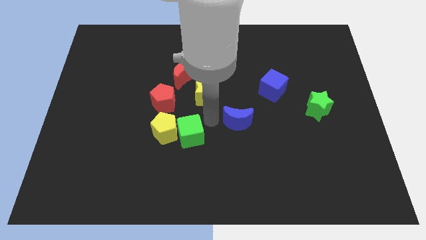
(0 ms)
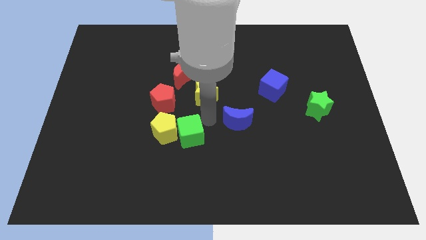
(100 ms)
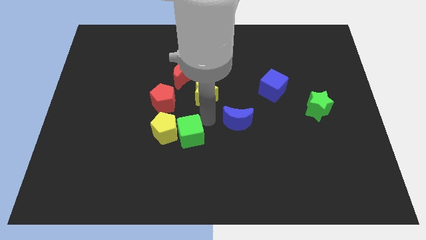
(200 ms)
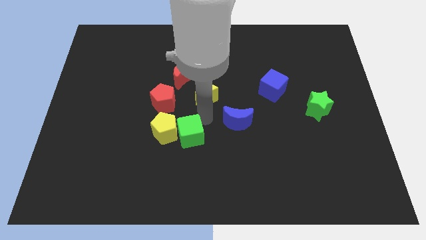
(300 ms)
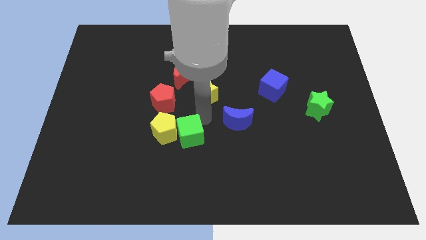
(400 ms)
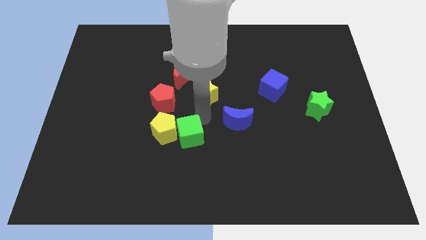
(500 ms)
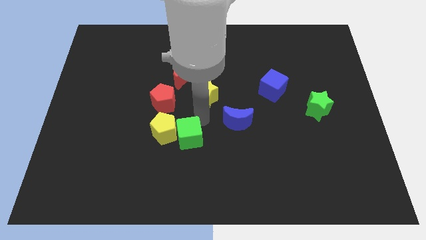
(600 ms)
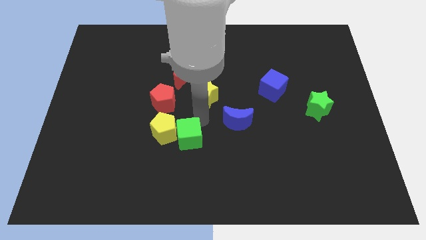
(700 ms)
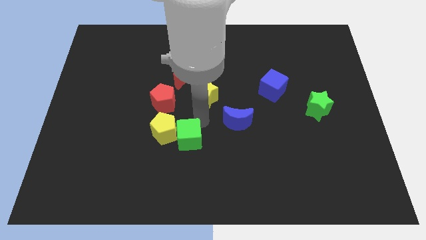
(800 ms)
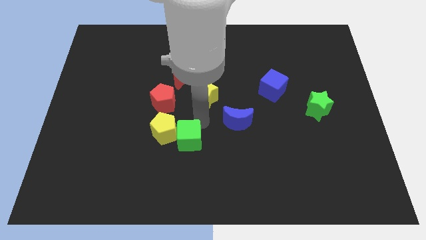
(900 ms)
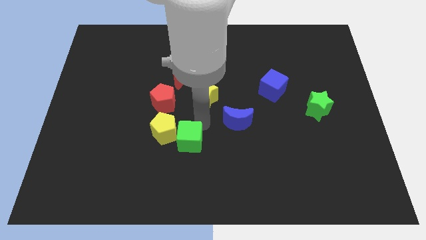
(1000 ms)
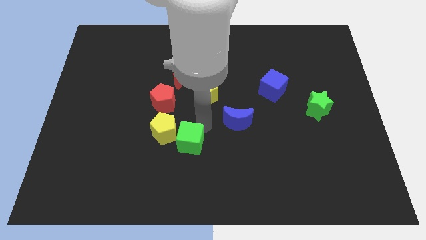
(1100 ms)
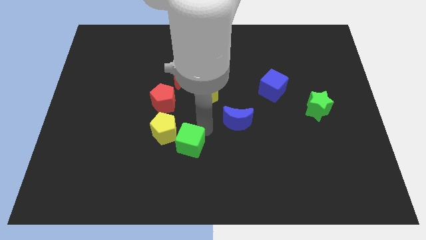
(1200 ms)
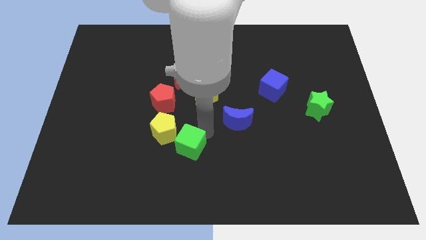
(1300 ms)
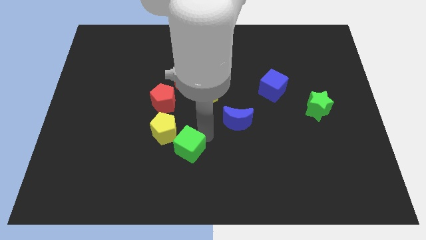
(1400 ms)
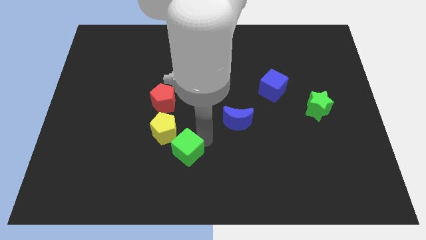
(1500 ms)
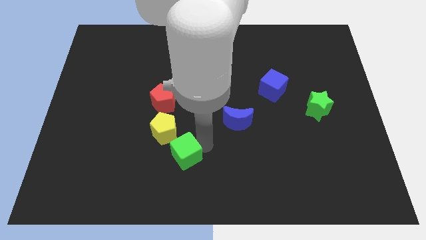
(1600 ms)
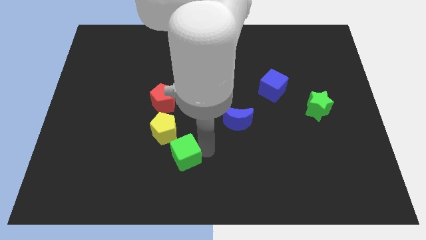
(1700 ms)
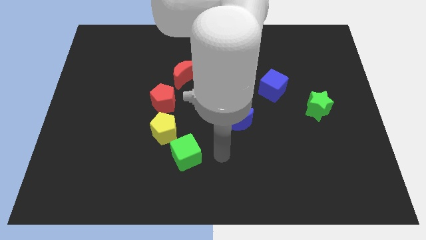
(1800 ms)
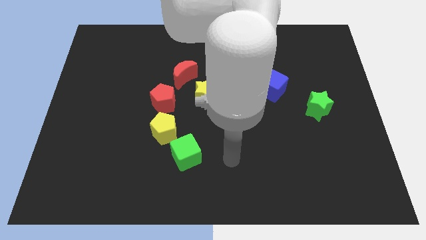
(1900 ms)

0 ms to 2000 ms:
slightly move the green cube downwards the yellow pentagon

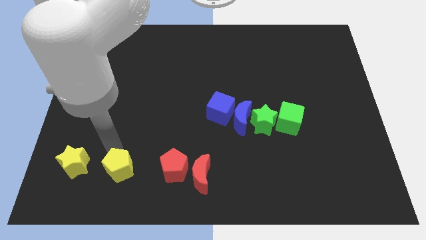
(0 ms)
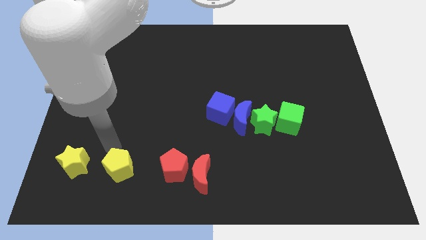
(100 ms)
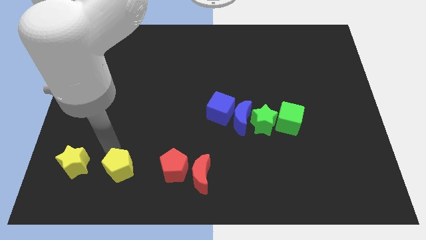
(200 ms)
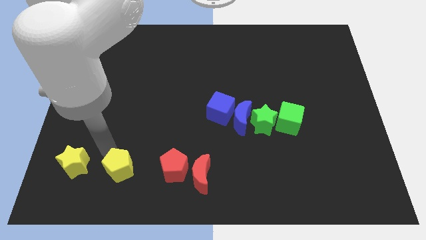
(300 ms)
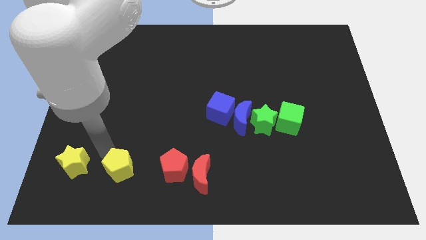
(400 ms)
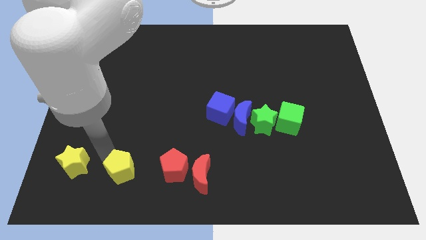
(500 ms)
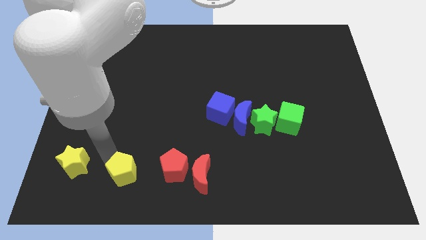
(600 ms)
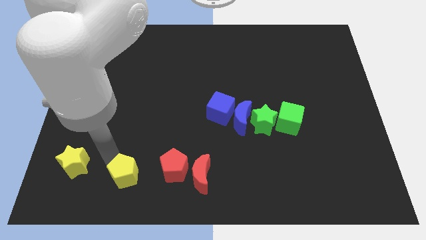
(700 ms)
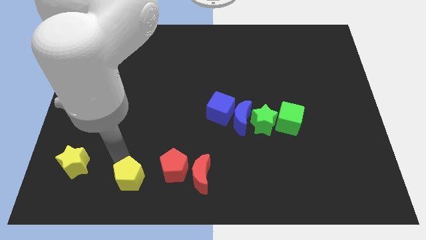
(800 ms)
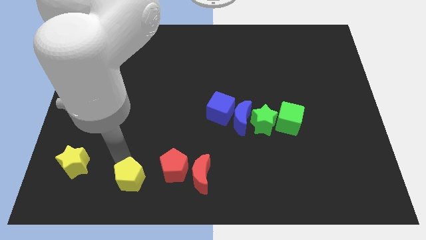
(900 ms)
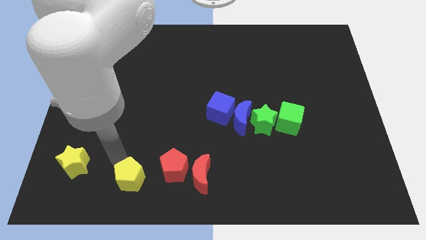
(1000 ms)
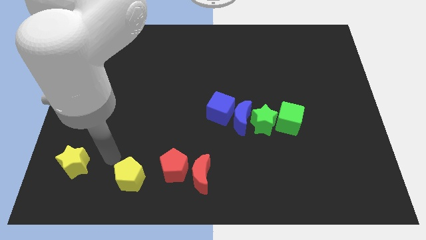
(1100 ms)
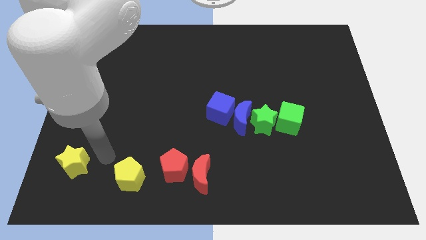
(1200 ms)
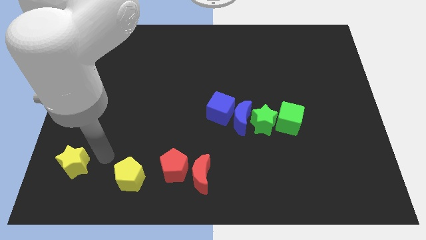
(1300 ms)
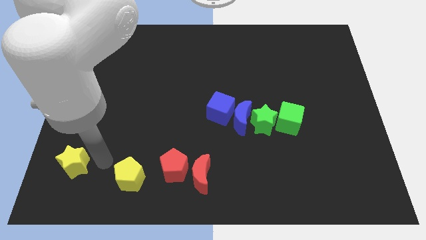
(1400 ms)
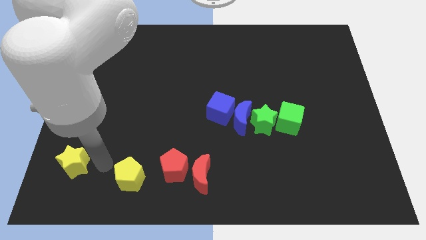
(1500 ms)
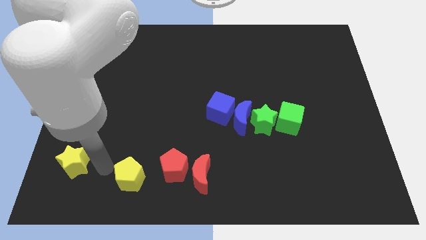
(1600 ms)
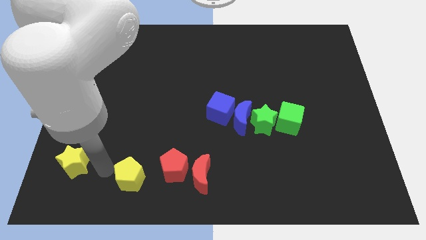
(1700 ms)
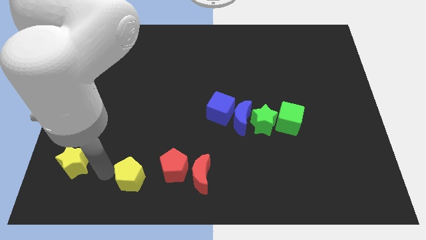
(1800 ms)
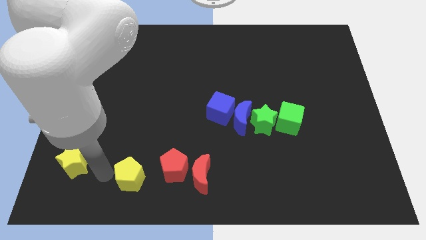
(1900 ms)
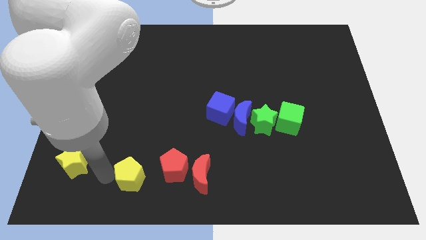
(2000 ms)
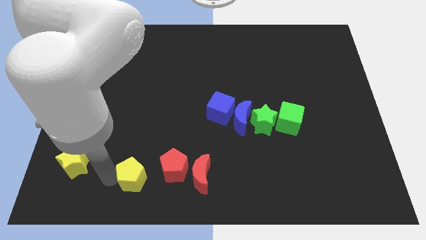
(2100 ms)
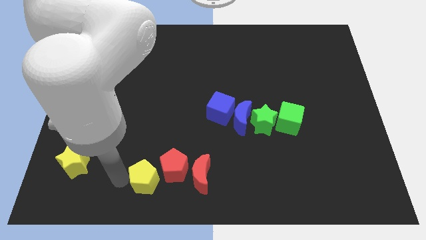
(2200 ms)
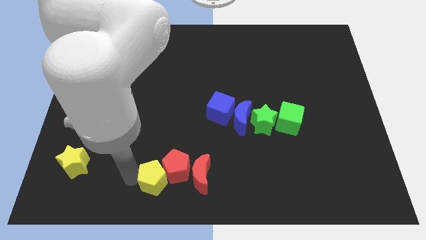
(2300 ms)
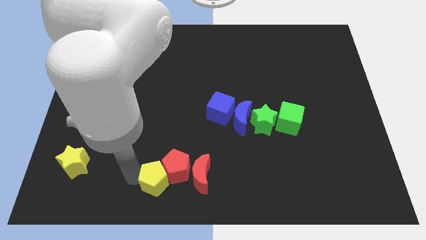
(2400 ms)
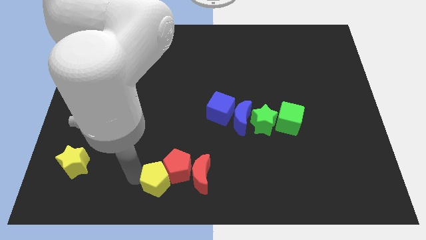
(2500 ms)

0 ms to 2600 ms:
move the yellow pentagon into the red pentagon

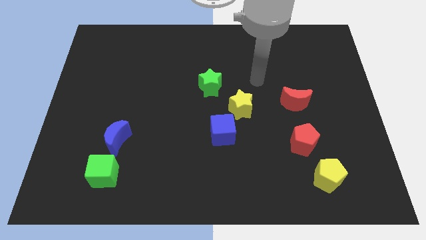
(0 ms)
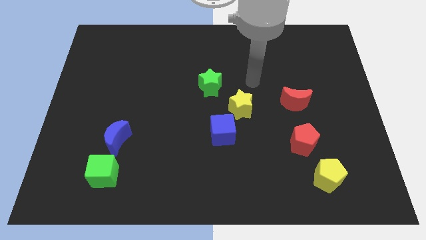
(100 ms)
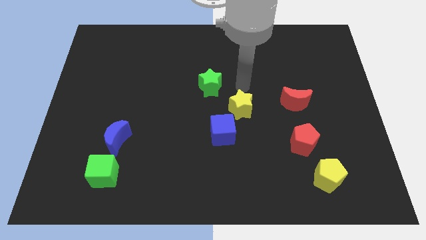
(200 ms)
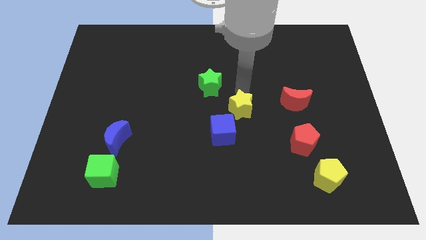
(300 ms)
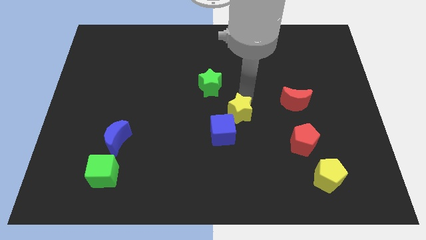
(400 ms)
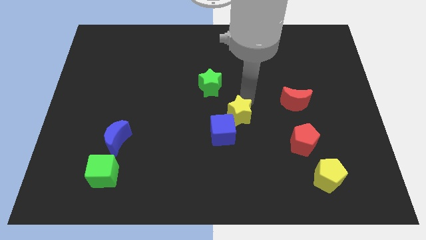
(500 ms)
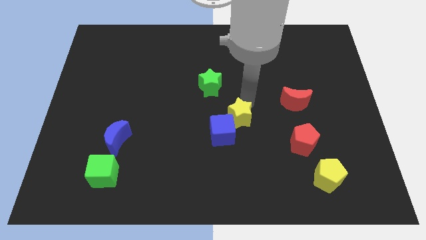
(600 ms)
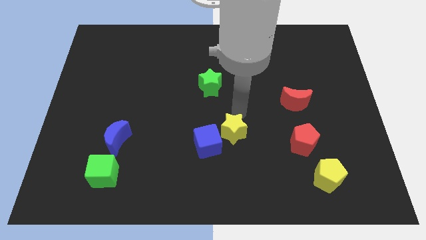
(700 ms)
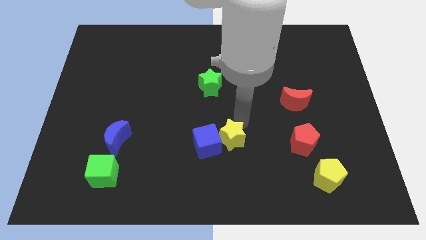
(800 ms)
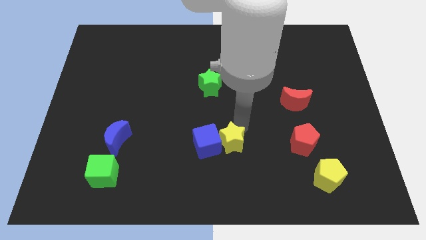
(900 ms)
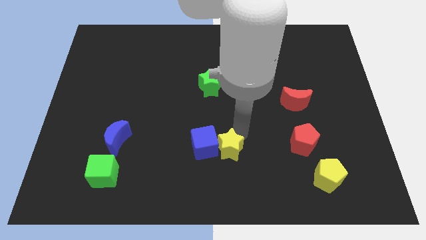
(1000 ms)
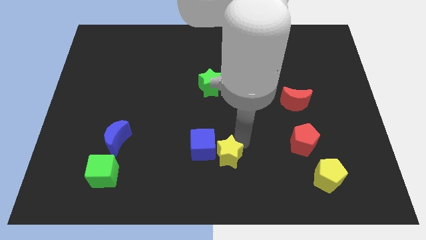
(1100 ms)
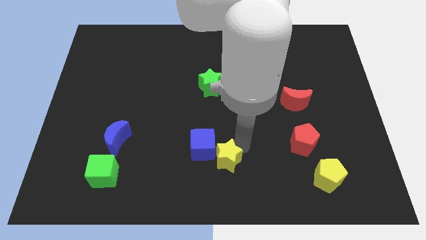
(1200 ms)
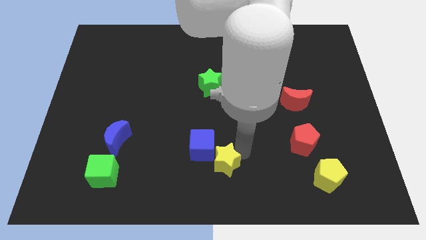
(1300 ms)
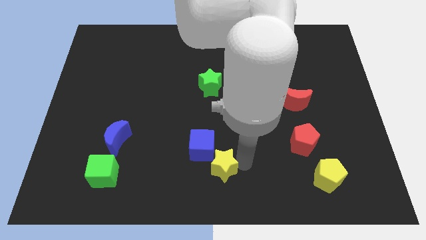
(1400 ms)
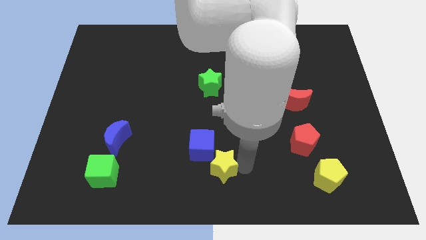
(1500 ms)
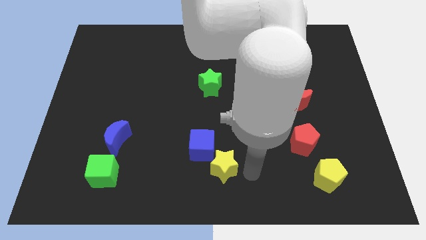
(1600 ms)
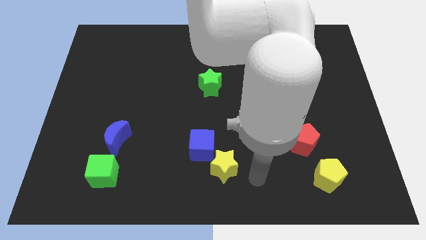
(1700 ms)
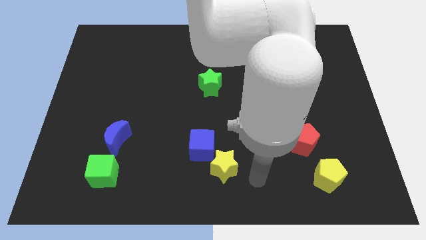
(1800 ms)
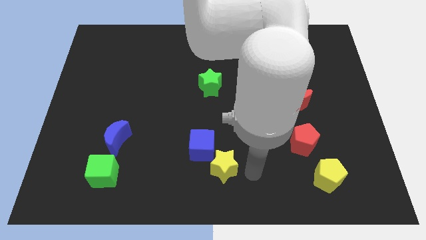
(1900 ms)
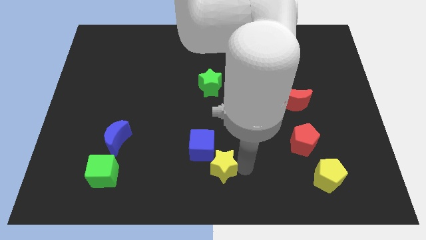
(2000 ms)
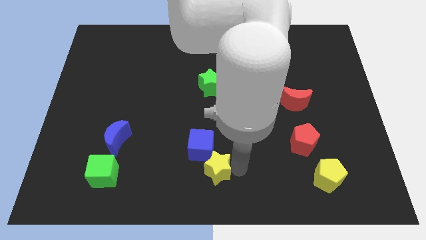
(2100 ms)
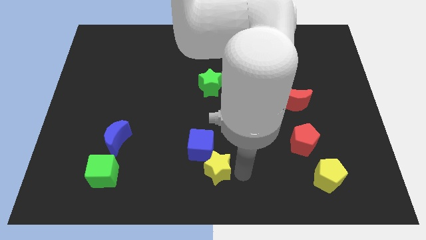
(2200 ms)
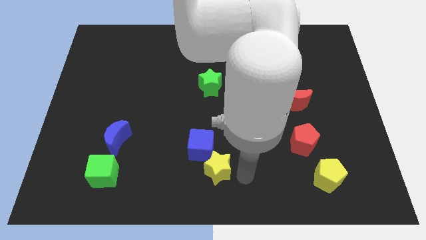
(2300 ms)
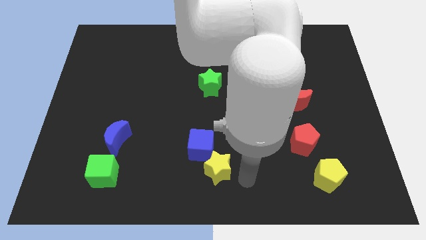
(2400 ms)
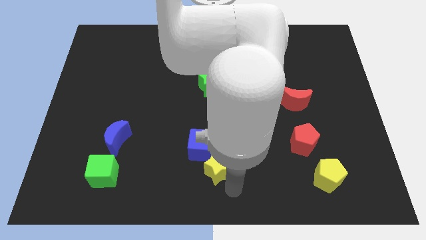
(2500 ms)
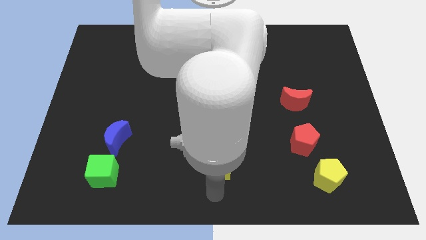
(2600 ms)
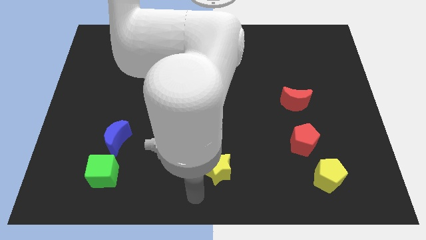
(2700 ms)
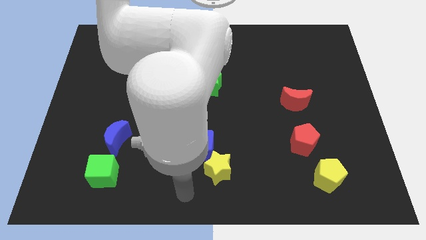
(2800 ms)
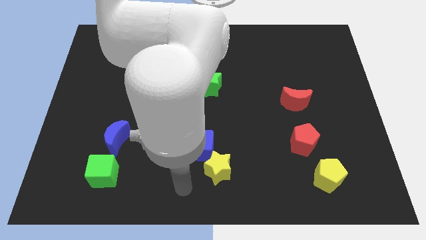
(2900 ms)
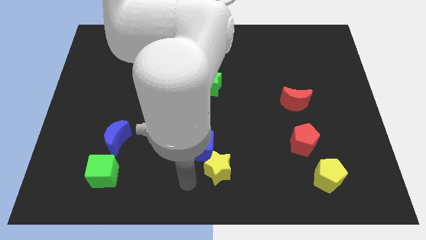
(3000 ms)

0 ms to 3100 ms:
push yellow star to the bottom right of blue cube

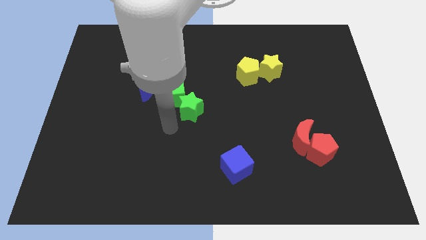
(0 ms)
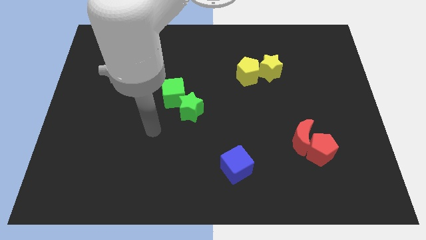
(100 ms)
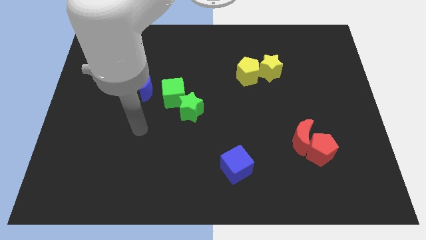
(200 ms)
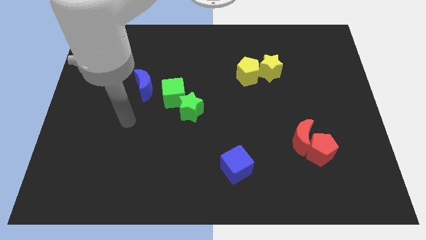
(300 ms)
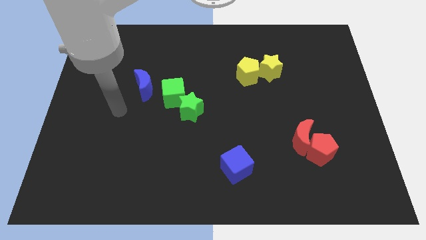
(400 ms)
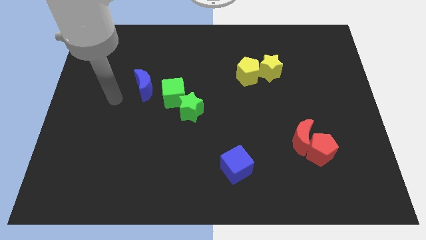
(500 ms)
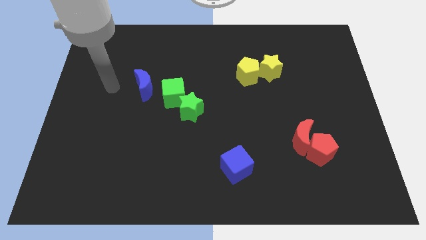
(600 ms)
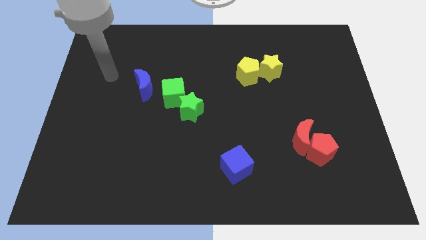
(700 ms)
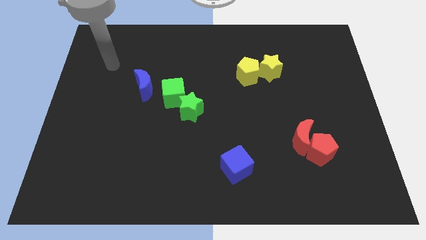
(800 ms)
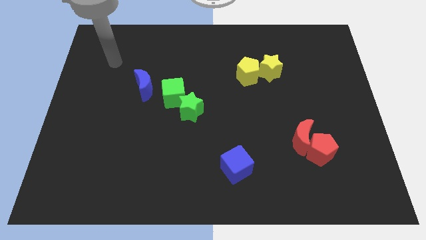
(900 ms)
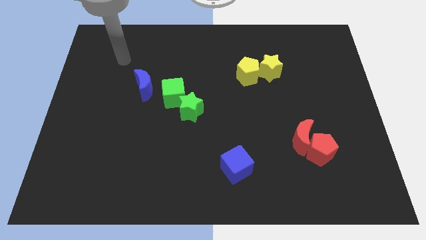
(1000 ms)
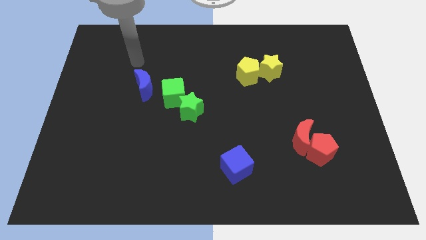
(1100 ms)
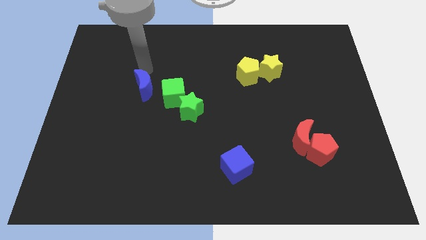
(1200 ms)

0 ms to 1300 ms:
place your arm above the blue moon

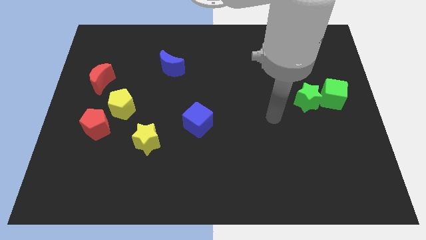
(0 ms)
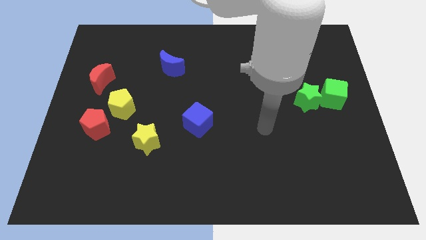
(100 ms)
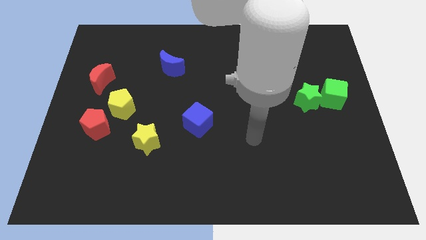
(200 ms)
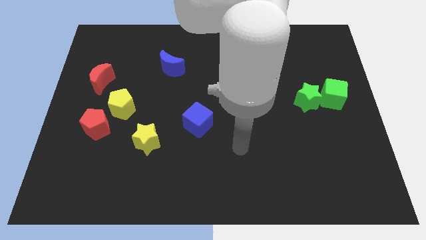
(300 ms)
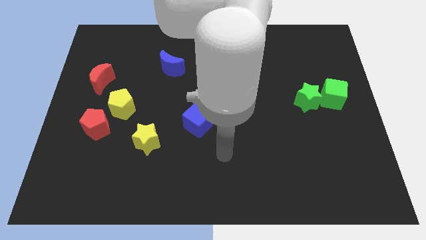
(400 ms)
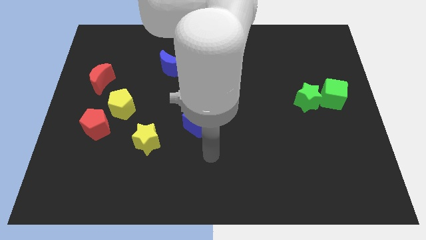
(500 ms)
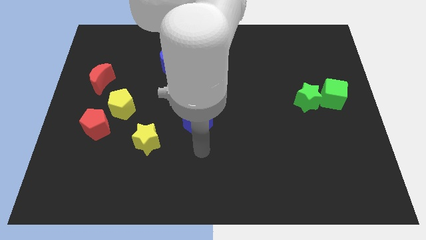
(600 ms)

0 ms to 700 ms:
move the arm towards the bottom of the blue cube
